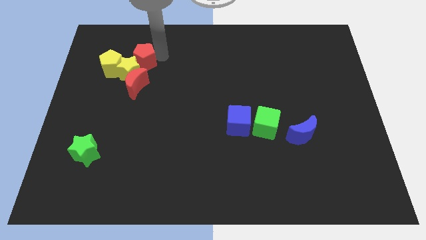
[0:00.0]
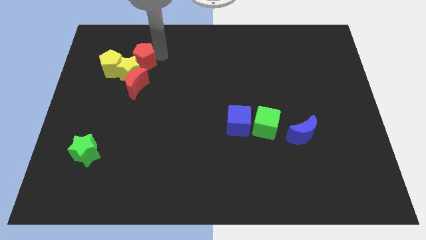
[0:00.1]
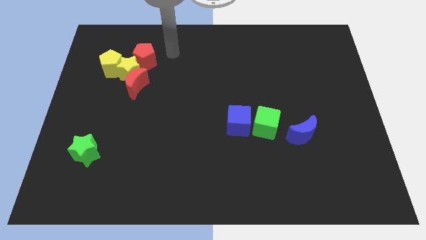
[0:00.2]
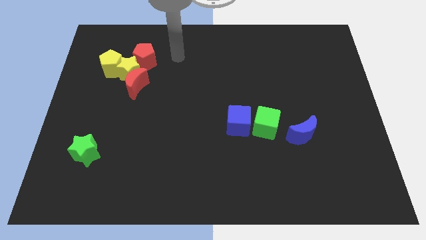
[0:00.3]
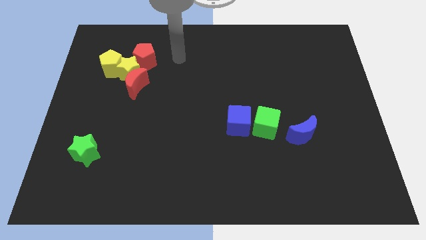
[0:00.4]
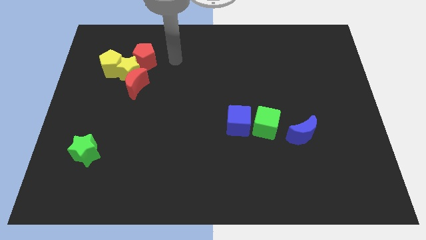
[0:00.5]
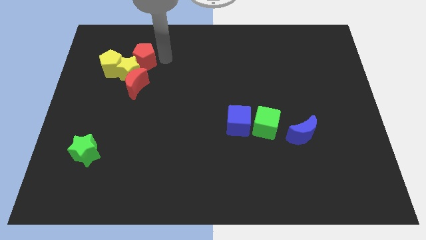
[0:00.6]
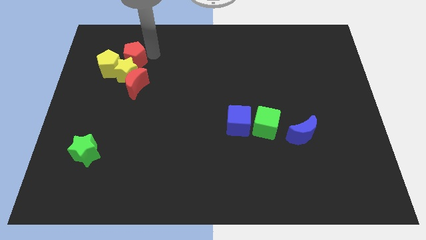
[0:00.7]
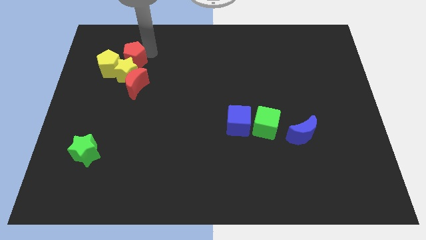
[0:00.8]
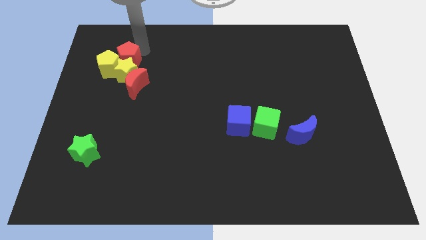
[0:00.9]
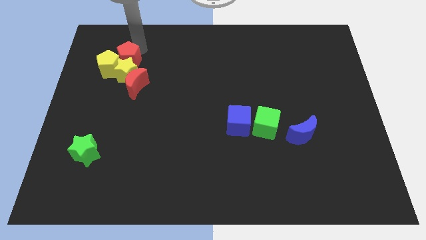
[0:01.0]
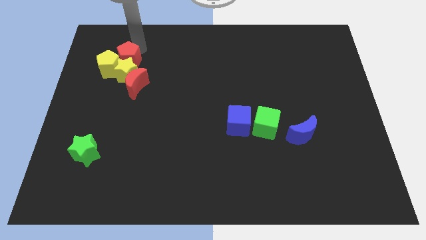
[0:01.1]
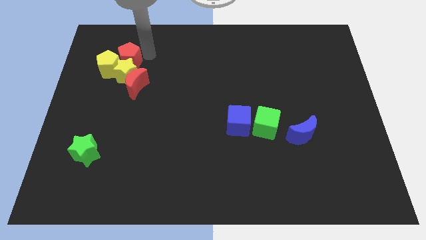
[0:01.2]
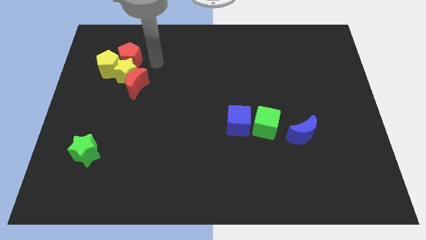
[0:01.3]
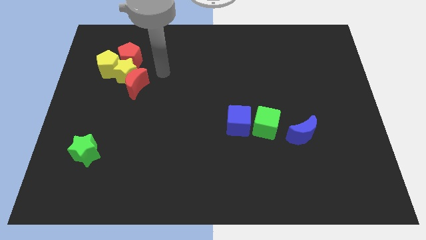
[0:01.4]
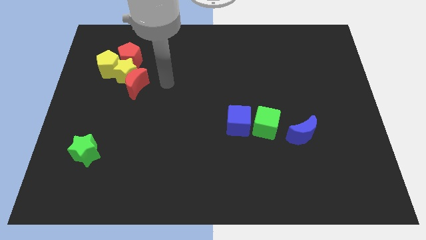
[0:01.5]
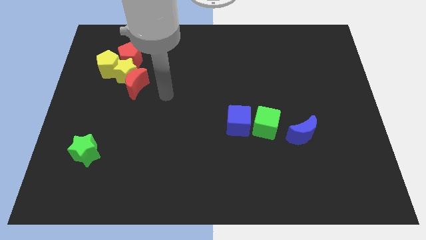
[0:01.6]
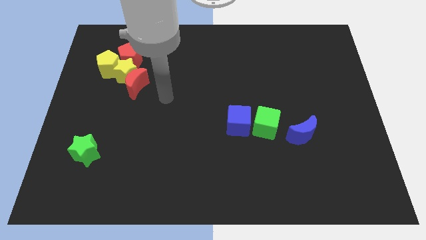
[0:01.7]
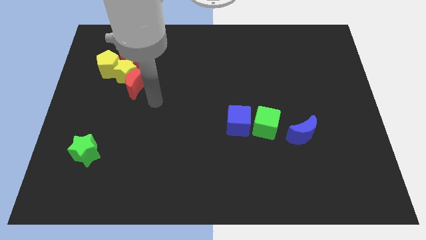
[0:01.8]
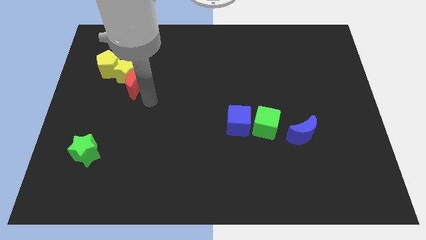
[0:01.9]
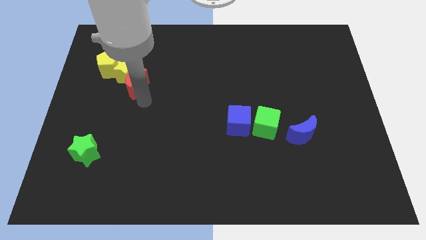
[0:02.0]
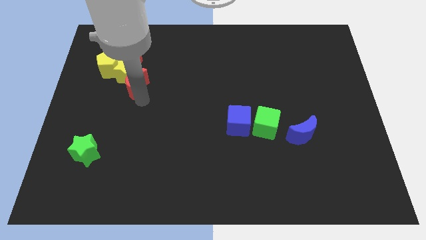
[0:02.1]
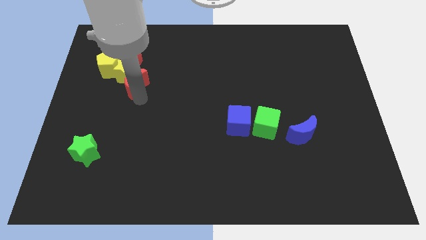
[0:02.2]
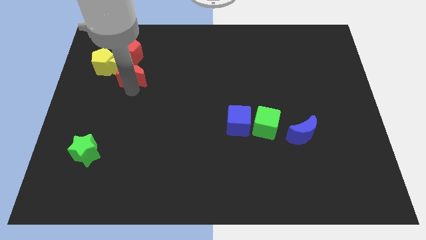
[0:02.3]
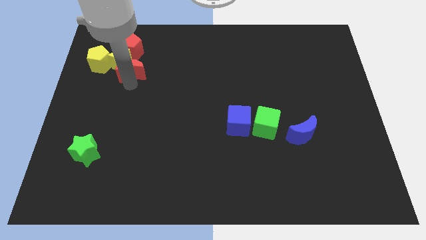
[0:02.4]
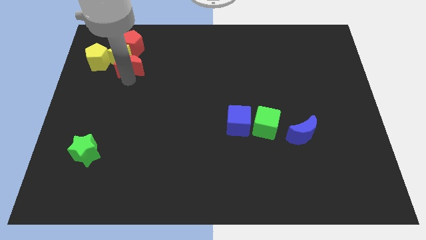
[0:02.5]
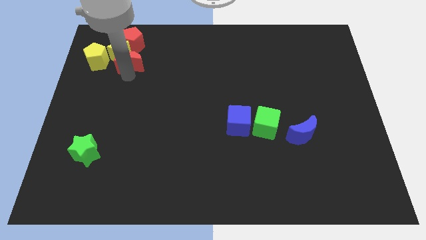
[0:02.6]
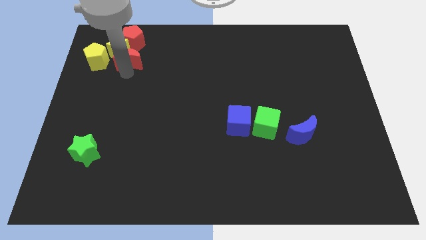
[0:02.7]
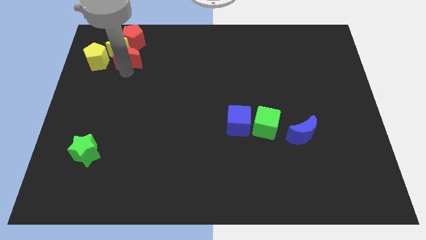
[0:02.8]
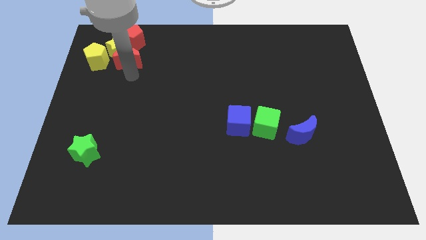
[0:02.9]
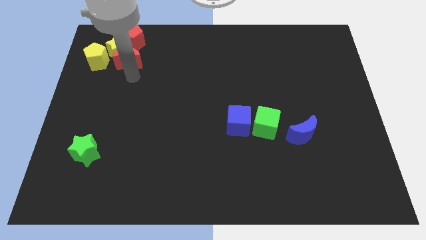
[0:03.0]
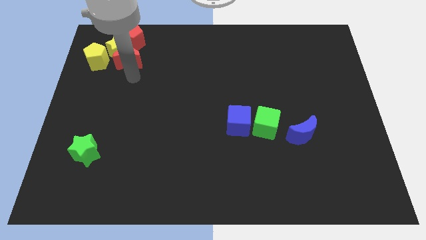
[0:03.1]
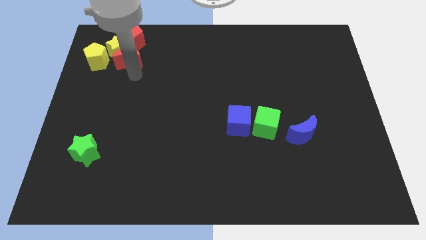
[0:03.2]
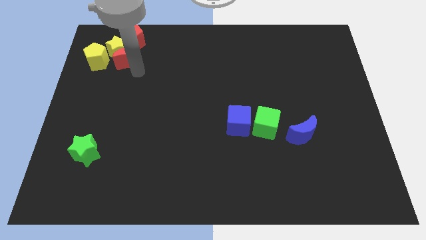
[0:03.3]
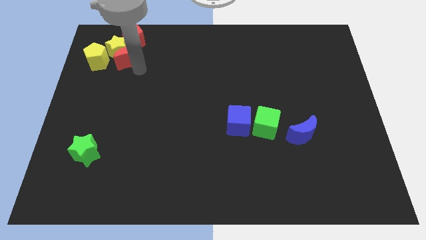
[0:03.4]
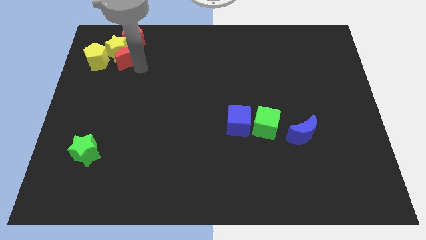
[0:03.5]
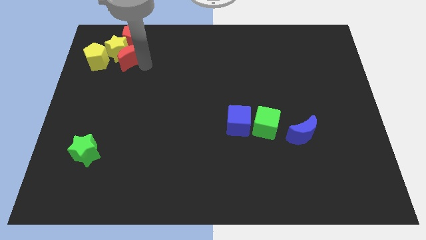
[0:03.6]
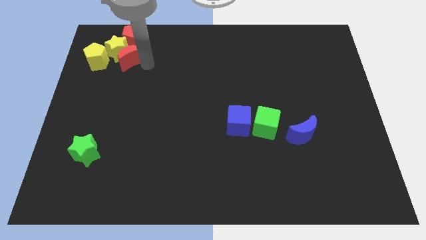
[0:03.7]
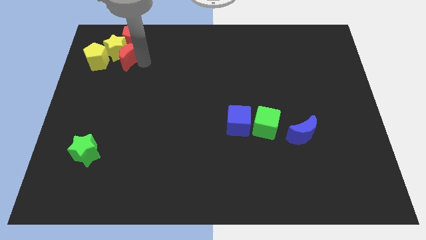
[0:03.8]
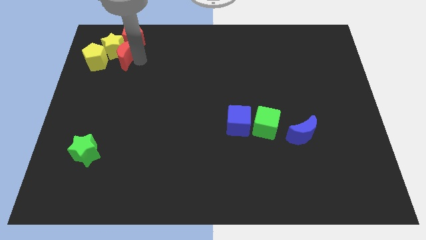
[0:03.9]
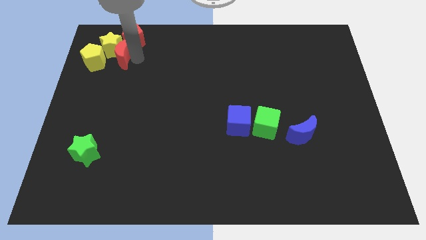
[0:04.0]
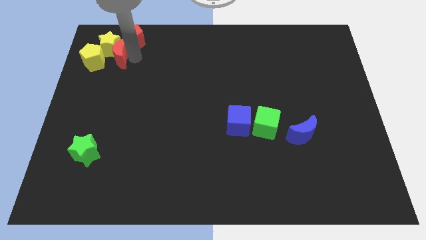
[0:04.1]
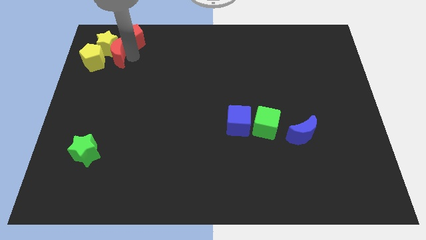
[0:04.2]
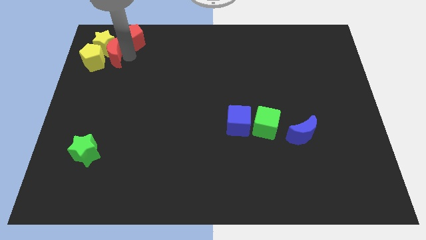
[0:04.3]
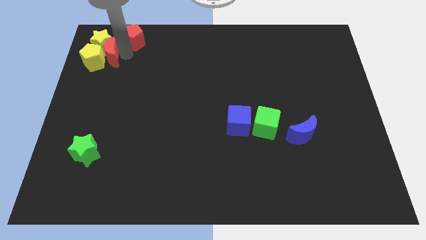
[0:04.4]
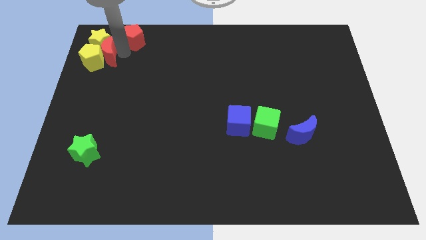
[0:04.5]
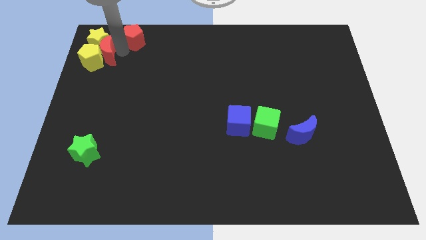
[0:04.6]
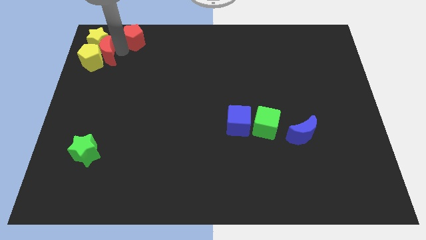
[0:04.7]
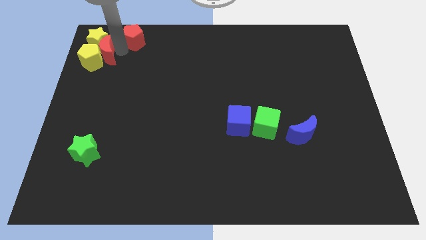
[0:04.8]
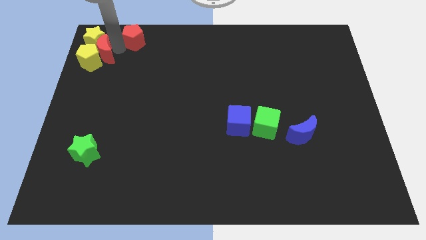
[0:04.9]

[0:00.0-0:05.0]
place all the yellow and red blocks at the top left corner of the board

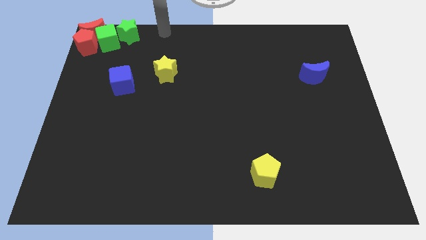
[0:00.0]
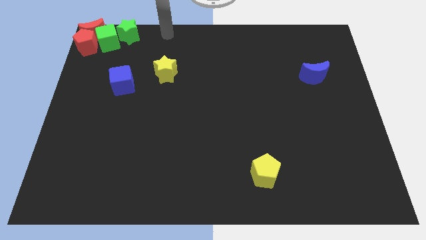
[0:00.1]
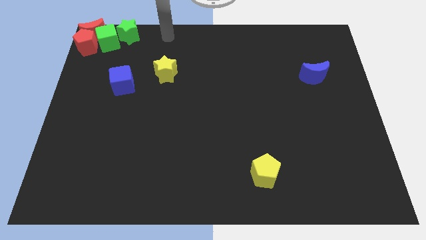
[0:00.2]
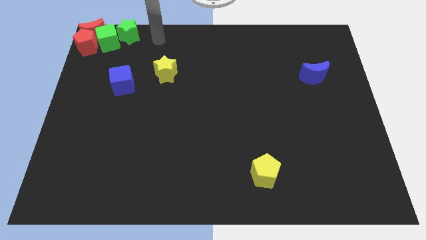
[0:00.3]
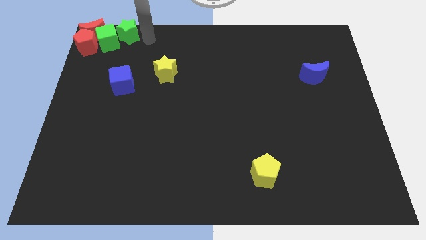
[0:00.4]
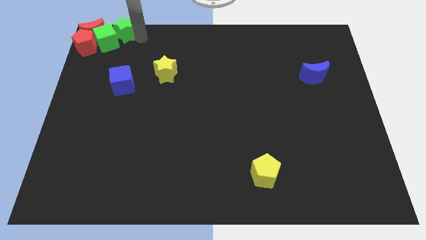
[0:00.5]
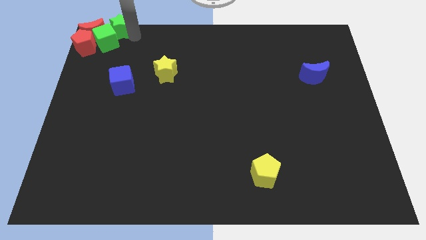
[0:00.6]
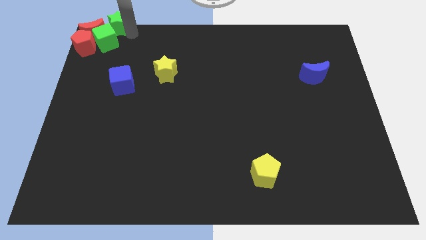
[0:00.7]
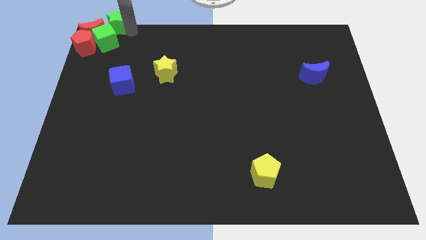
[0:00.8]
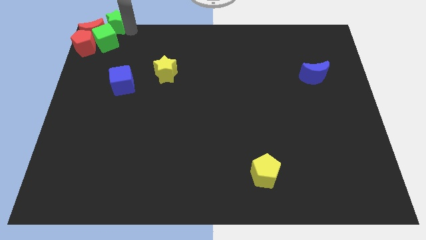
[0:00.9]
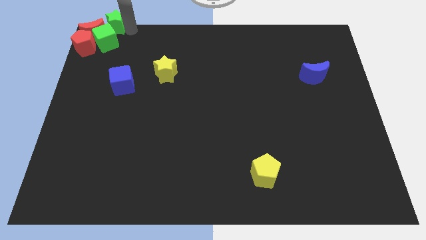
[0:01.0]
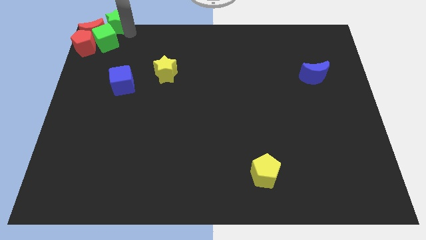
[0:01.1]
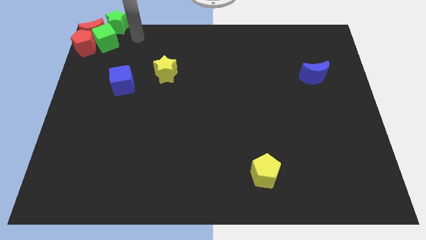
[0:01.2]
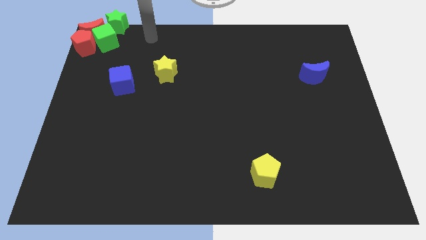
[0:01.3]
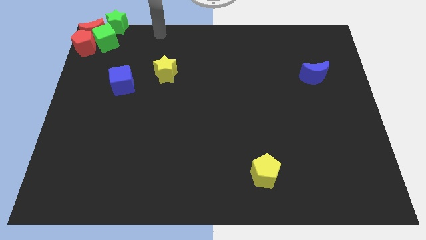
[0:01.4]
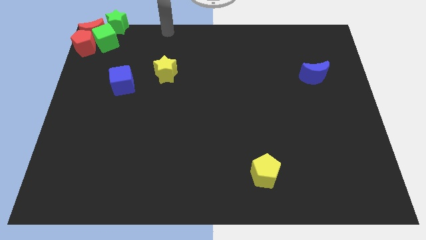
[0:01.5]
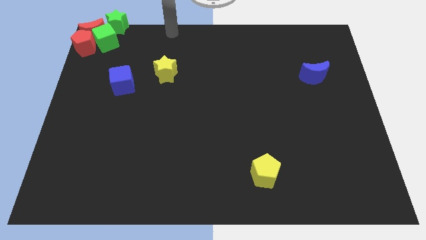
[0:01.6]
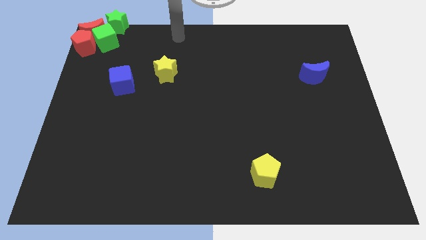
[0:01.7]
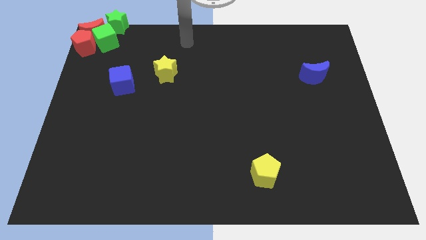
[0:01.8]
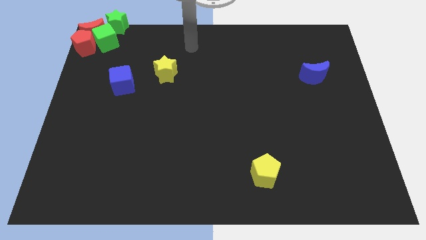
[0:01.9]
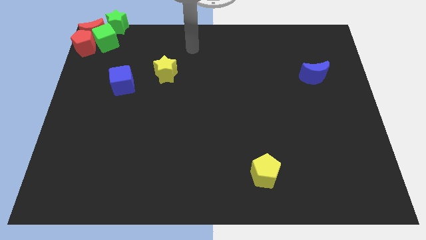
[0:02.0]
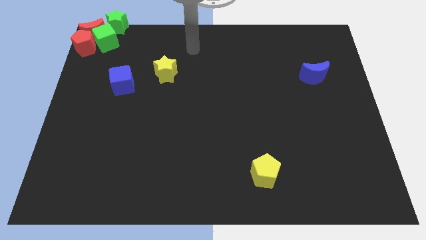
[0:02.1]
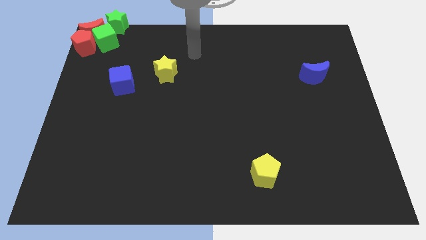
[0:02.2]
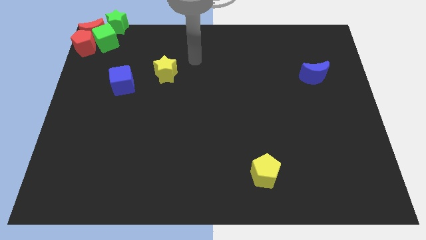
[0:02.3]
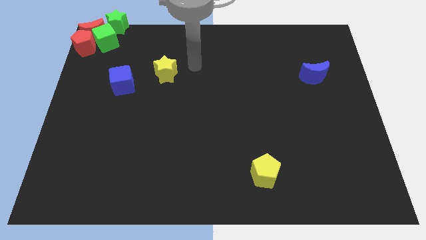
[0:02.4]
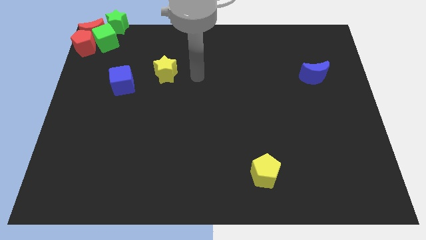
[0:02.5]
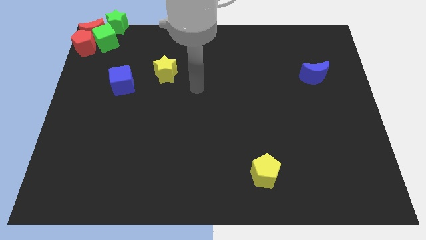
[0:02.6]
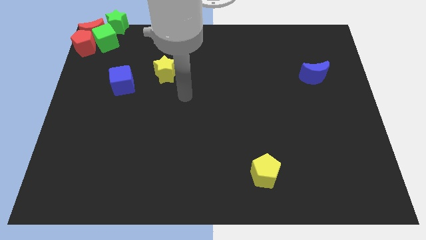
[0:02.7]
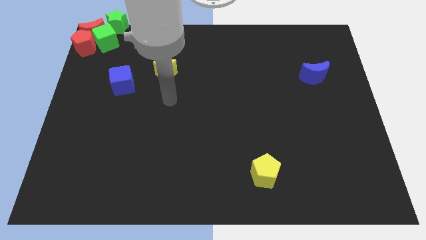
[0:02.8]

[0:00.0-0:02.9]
point your hand below the yellow star

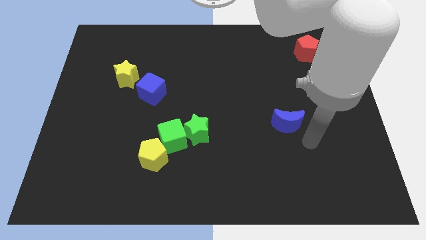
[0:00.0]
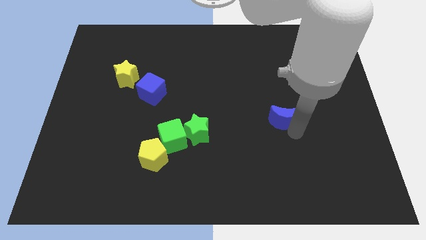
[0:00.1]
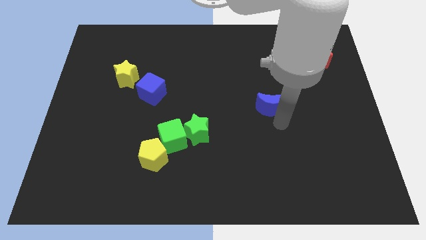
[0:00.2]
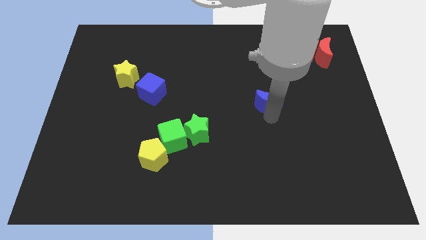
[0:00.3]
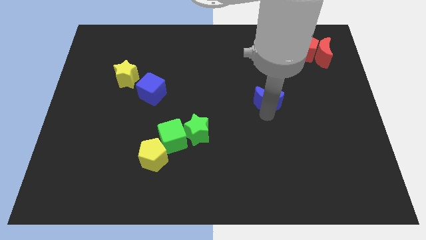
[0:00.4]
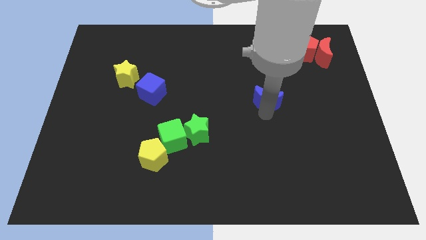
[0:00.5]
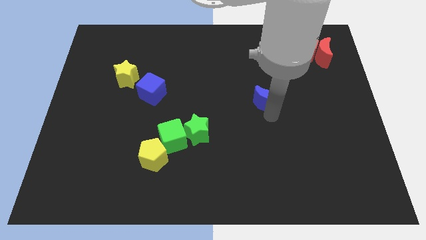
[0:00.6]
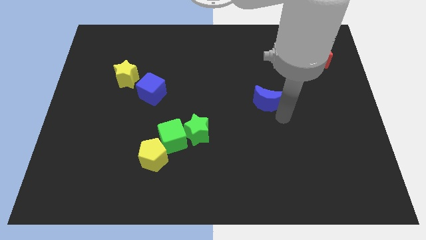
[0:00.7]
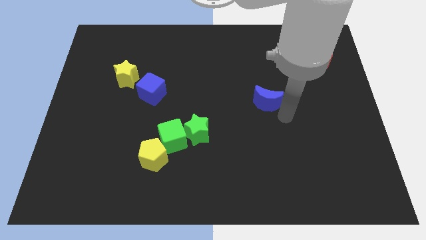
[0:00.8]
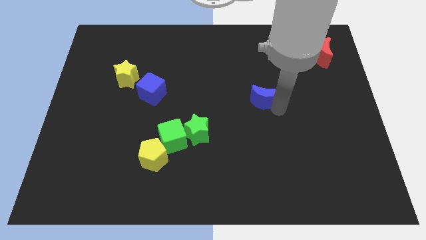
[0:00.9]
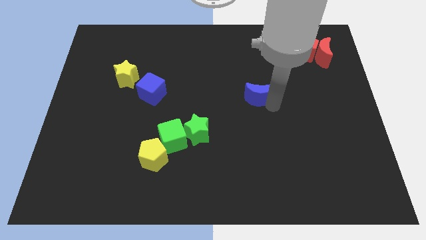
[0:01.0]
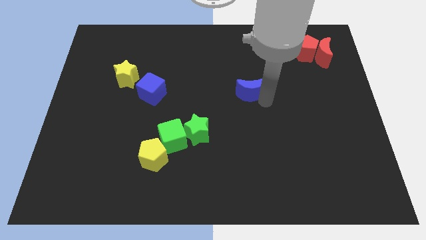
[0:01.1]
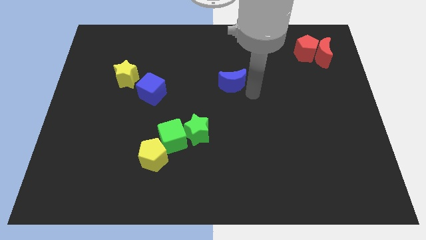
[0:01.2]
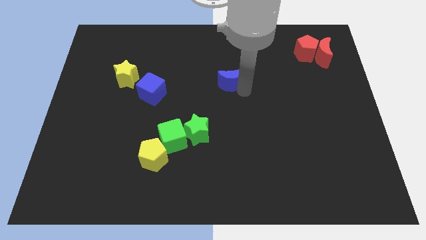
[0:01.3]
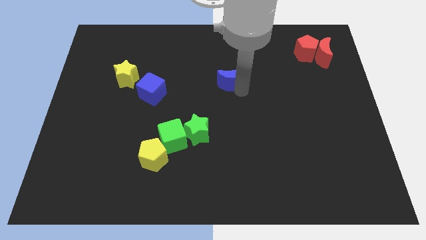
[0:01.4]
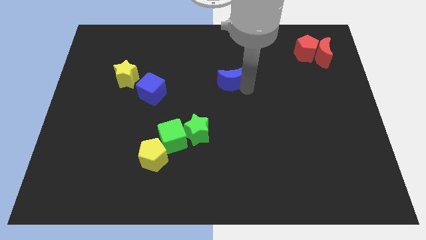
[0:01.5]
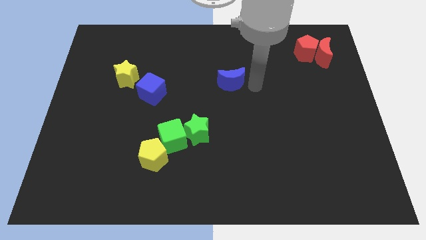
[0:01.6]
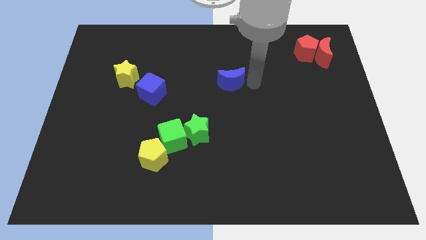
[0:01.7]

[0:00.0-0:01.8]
move the blue crescent upwards to the board
